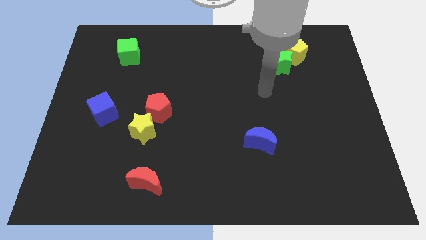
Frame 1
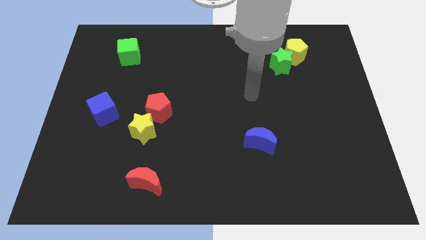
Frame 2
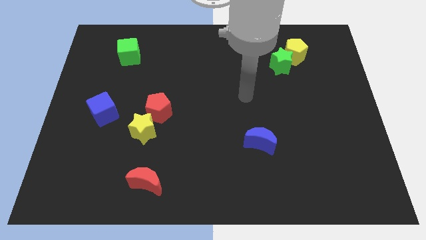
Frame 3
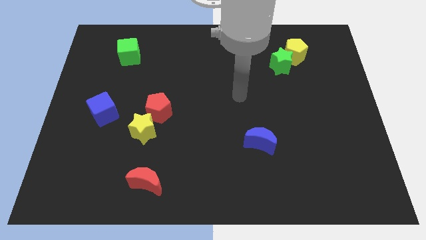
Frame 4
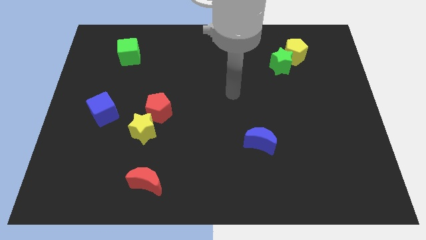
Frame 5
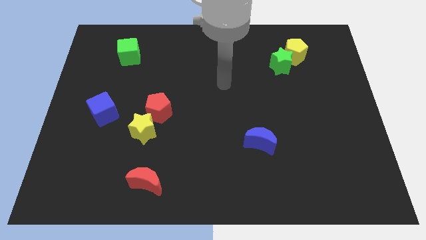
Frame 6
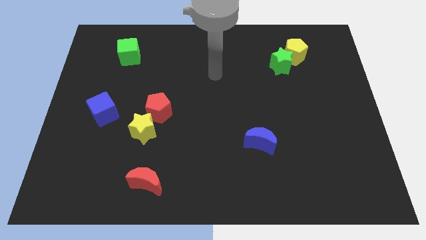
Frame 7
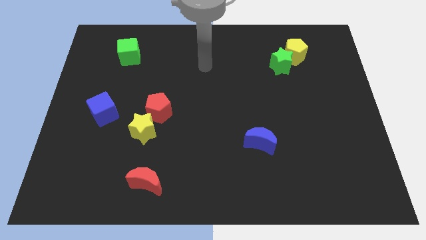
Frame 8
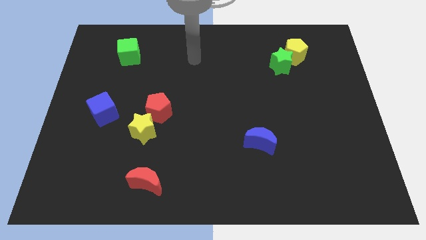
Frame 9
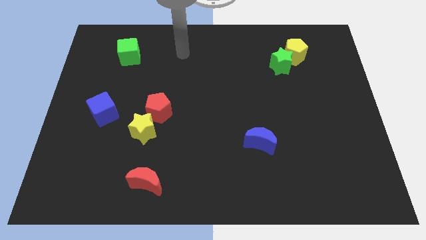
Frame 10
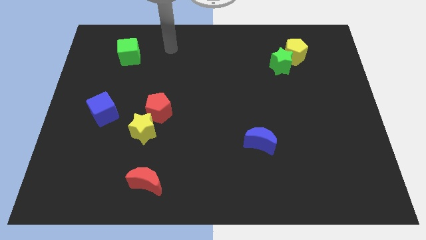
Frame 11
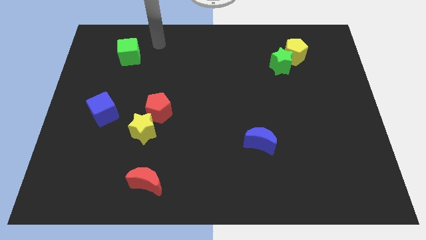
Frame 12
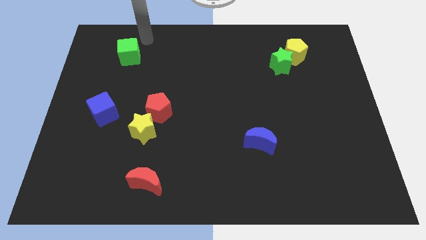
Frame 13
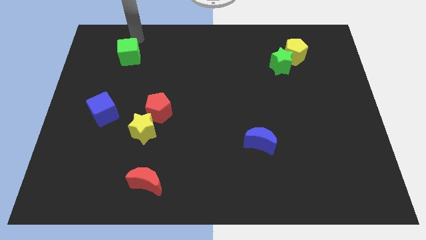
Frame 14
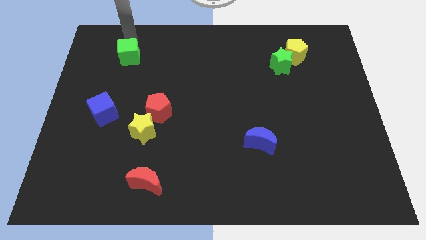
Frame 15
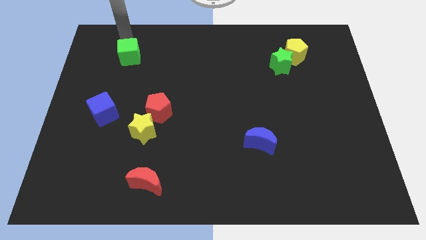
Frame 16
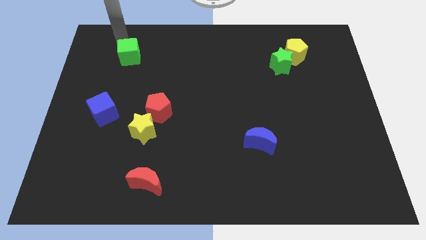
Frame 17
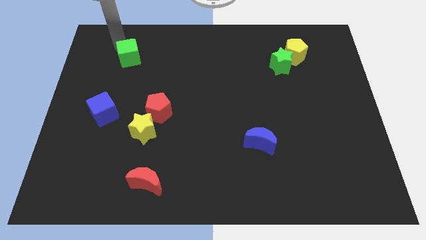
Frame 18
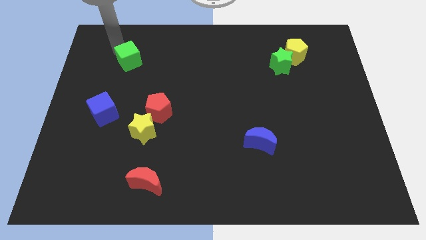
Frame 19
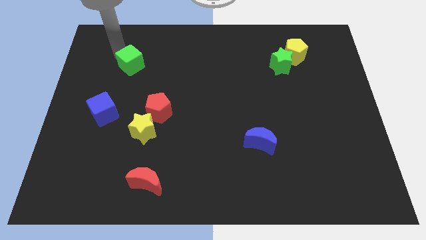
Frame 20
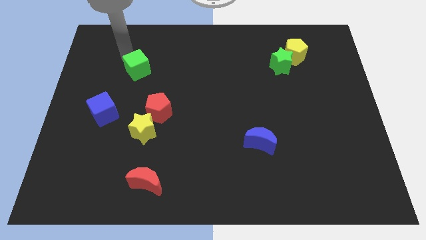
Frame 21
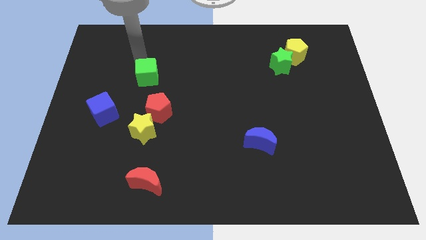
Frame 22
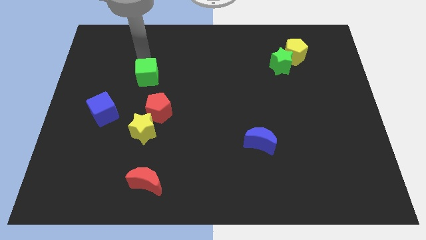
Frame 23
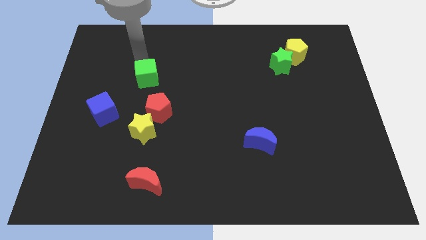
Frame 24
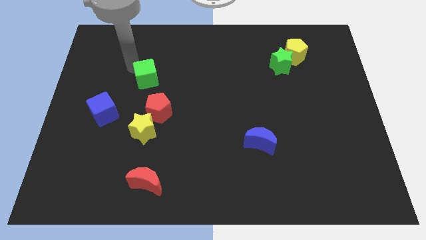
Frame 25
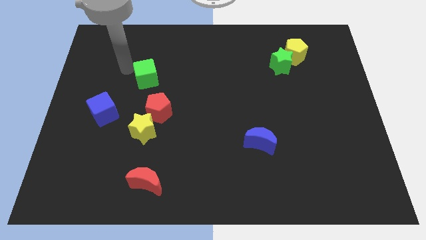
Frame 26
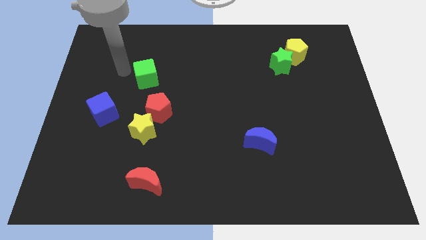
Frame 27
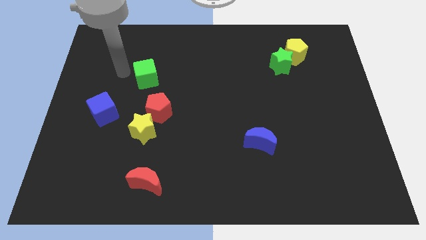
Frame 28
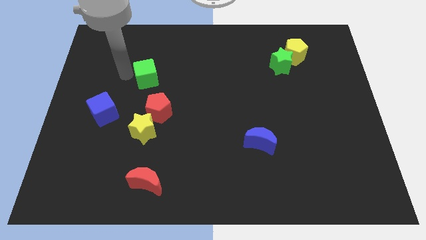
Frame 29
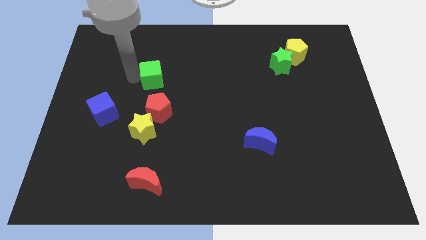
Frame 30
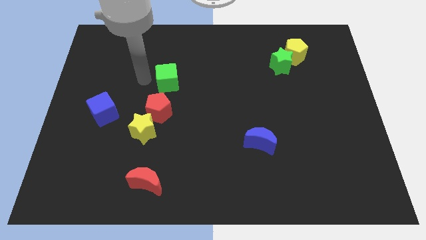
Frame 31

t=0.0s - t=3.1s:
place the green cube above the red pentagon

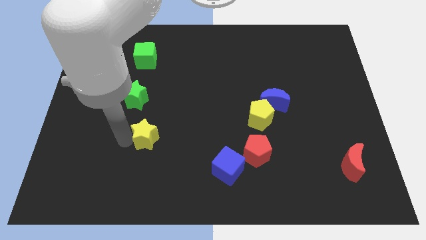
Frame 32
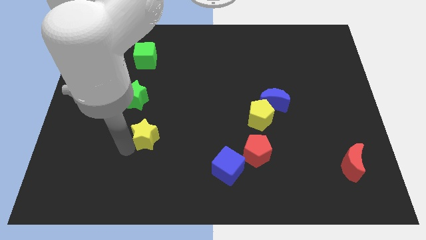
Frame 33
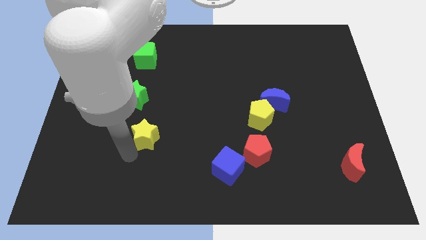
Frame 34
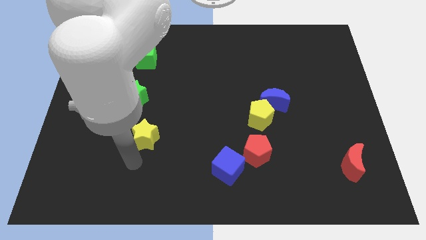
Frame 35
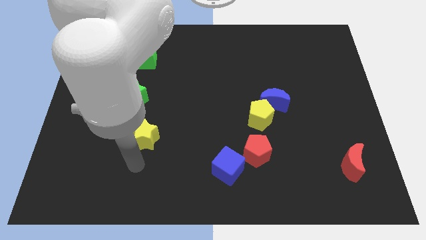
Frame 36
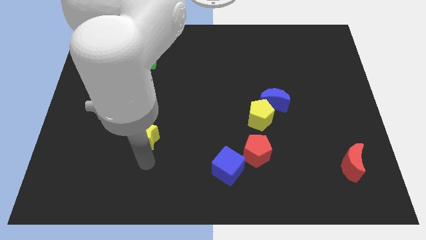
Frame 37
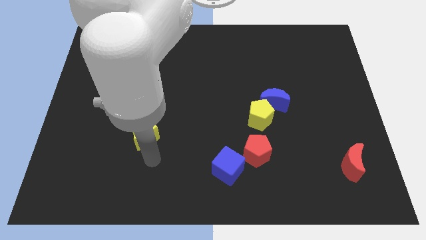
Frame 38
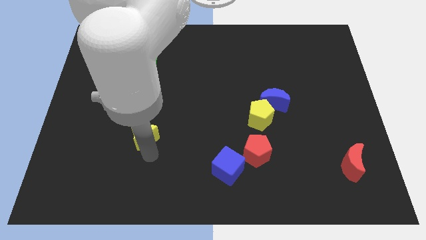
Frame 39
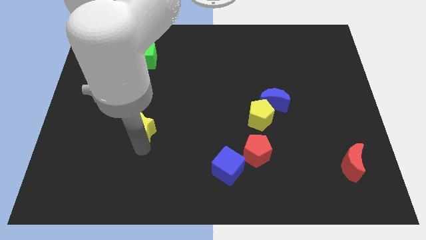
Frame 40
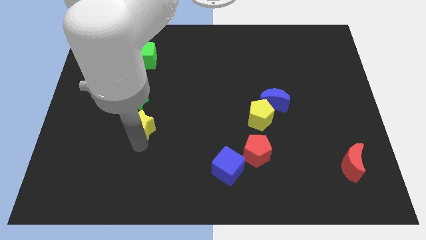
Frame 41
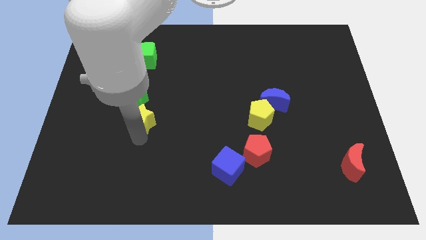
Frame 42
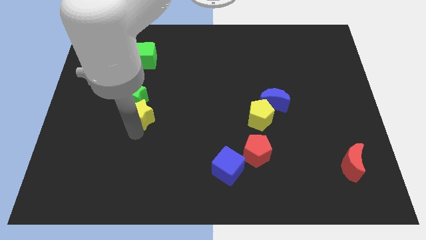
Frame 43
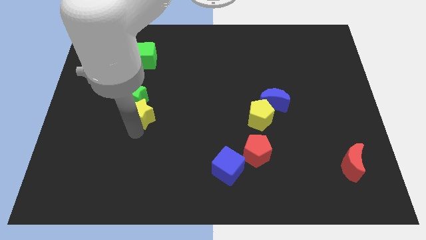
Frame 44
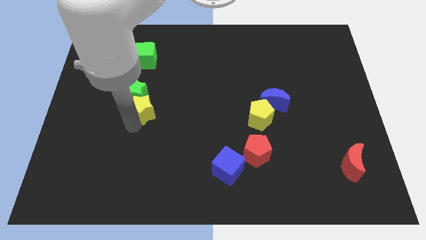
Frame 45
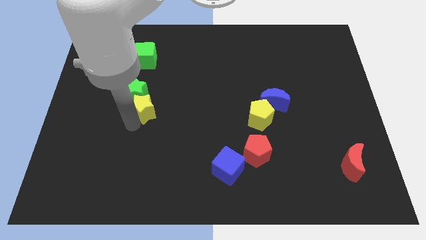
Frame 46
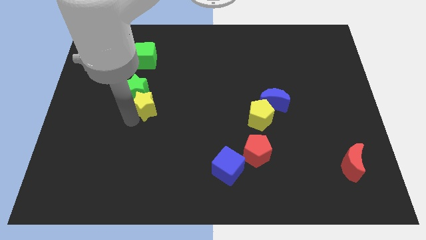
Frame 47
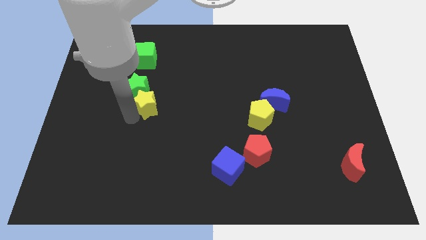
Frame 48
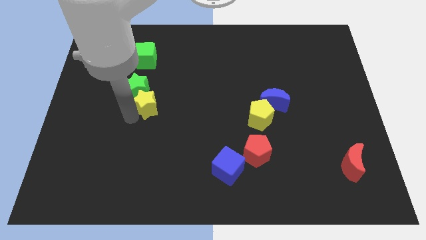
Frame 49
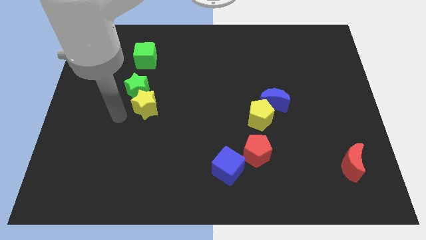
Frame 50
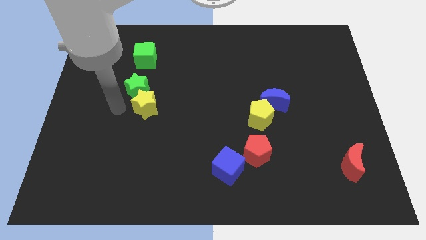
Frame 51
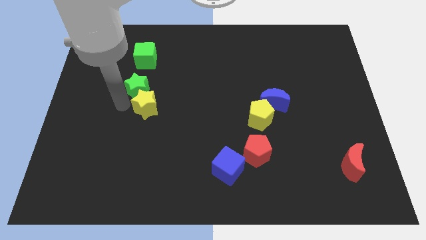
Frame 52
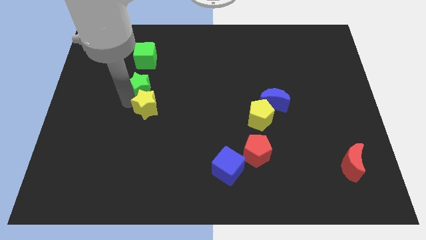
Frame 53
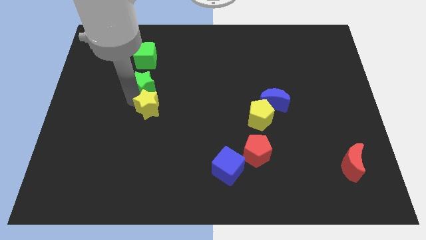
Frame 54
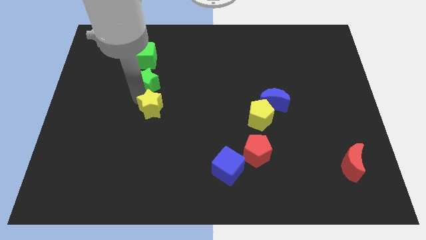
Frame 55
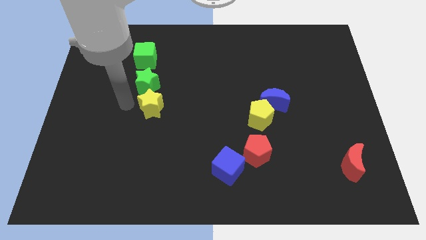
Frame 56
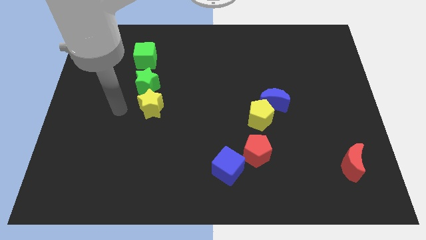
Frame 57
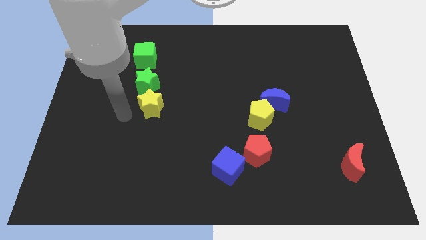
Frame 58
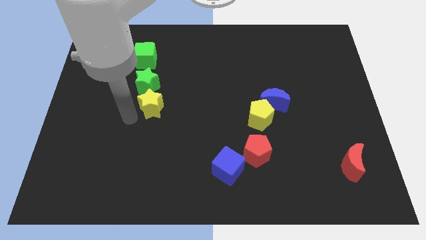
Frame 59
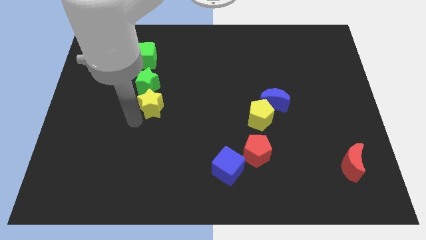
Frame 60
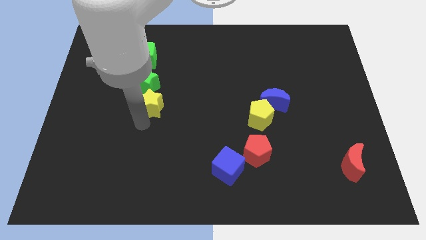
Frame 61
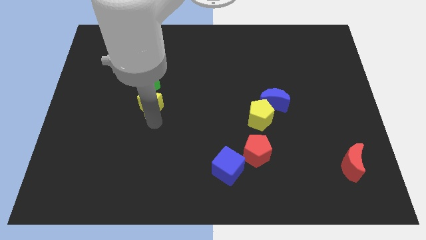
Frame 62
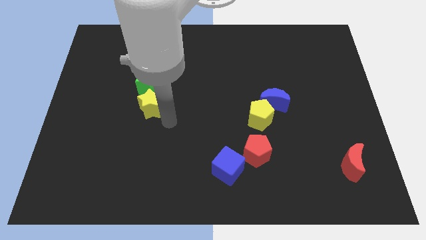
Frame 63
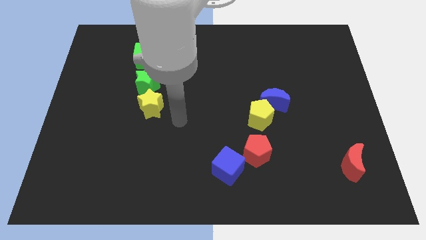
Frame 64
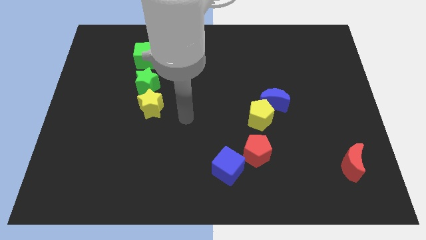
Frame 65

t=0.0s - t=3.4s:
push both the stars to the bottom right side of the green cube

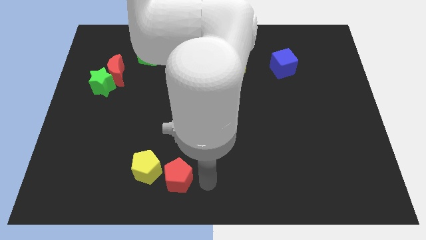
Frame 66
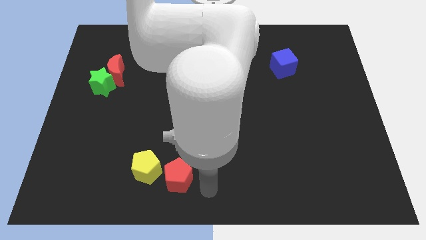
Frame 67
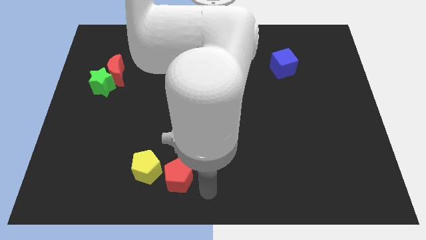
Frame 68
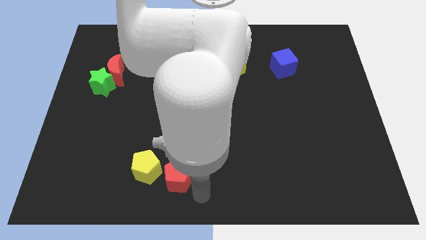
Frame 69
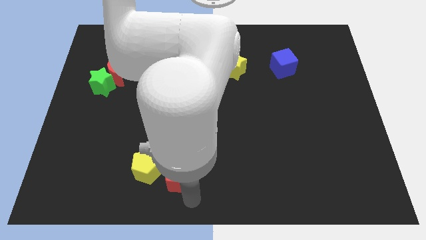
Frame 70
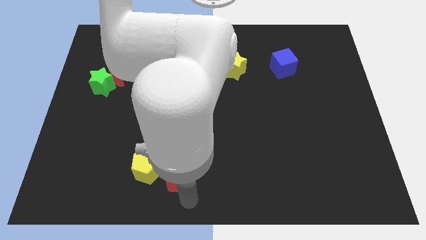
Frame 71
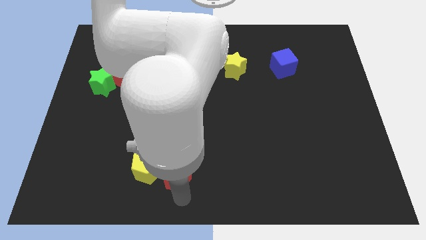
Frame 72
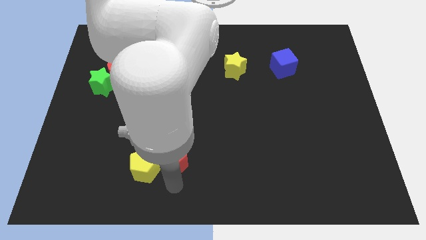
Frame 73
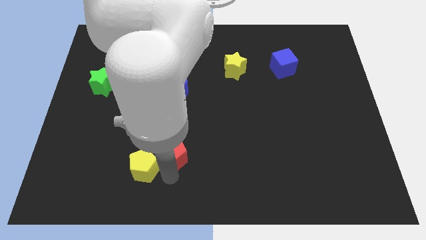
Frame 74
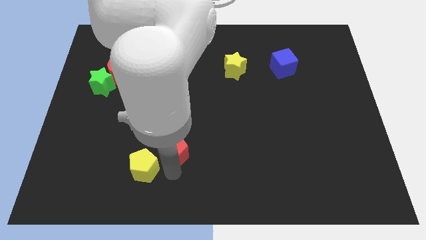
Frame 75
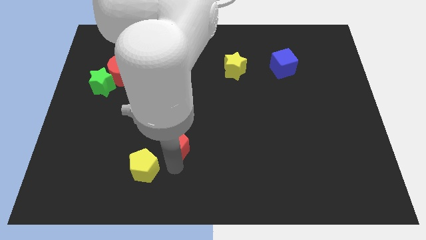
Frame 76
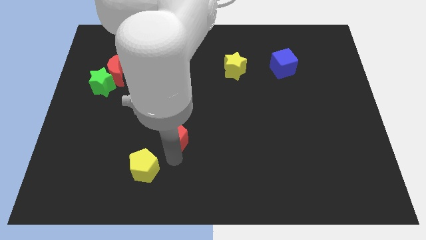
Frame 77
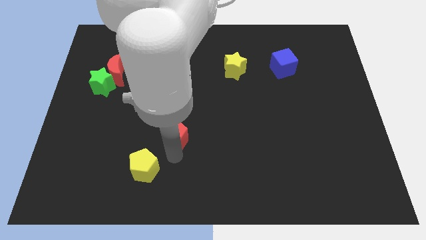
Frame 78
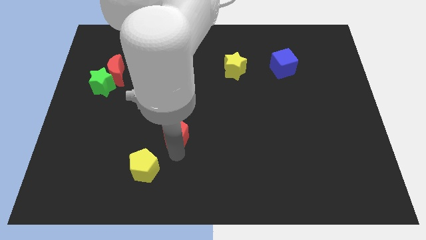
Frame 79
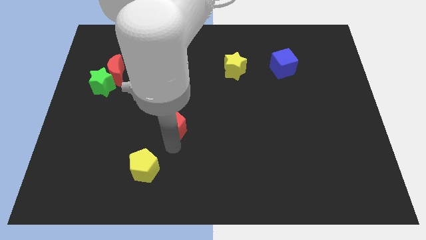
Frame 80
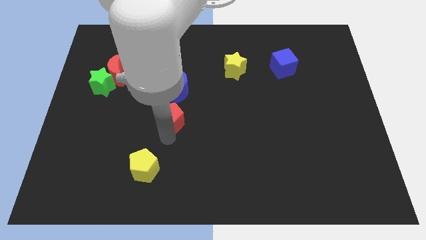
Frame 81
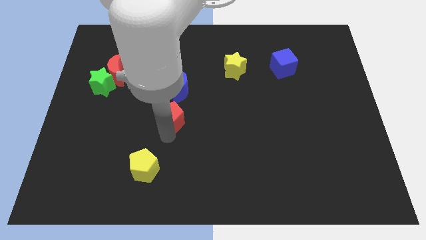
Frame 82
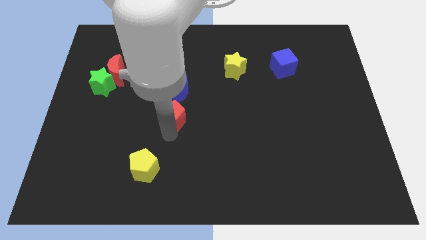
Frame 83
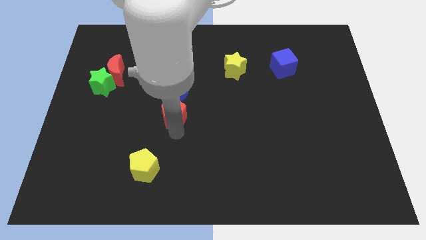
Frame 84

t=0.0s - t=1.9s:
move the red pentagon below the blue crescent

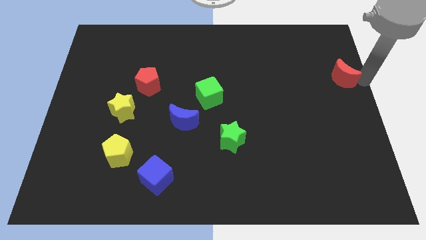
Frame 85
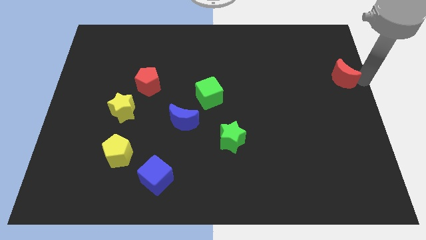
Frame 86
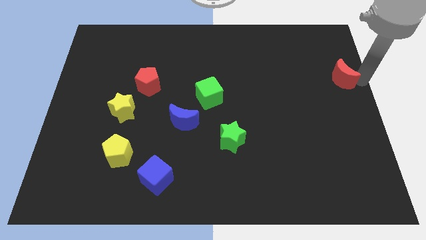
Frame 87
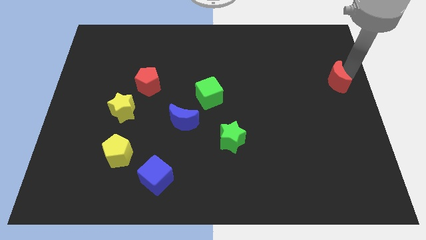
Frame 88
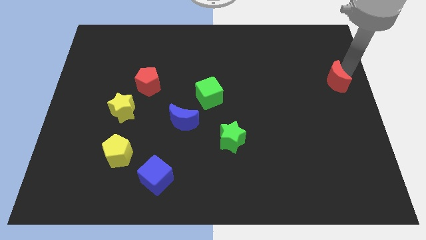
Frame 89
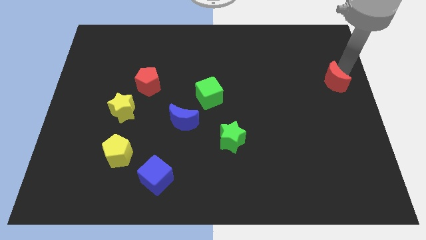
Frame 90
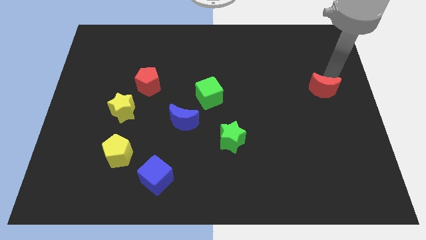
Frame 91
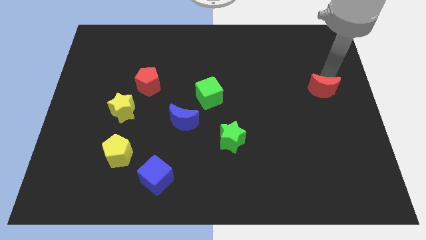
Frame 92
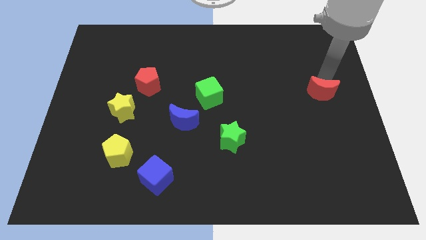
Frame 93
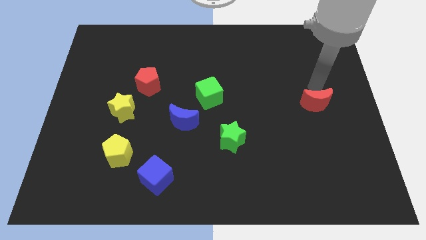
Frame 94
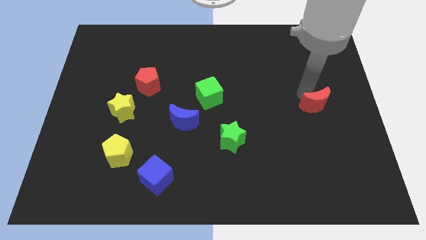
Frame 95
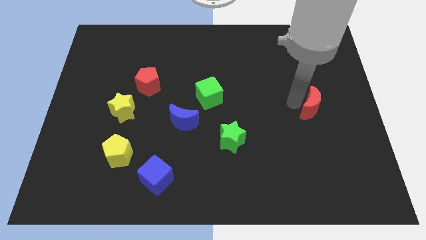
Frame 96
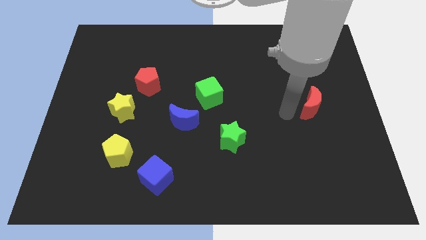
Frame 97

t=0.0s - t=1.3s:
move red moon slightly down
